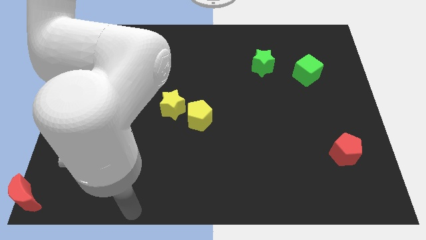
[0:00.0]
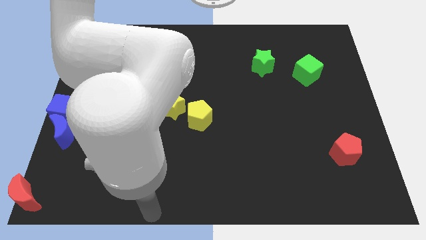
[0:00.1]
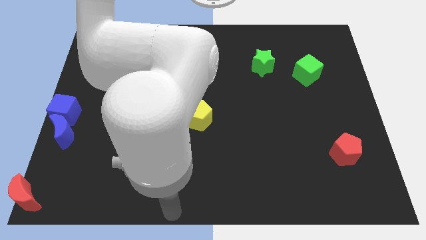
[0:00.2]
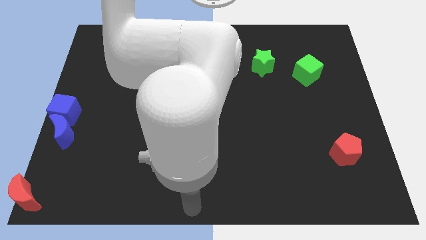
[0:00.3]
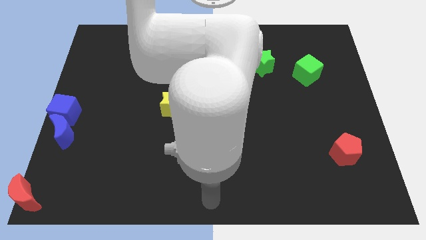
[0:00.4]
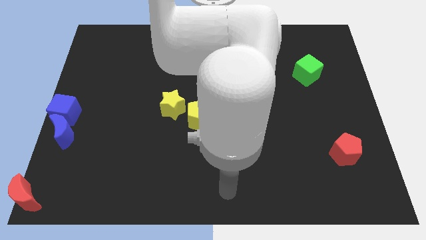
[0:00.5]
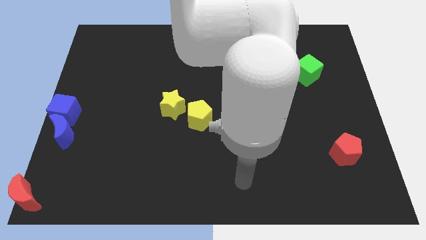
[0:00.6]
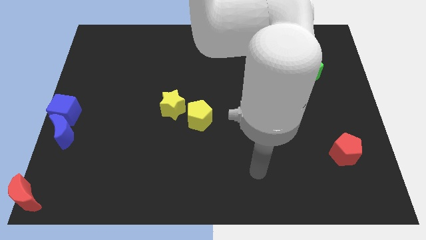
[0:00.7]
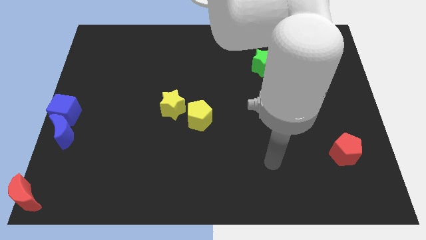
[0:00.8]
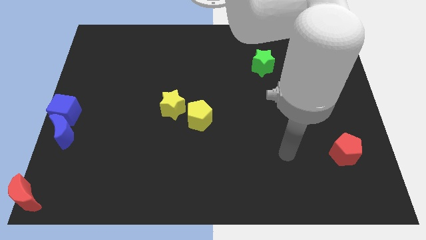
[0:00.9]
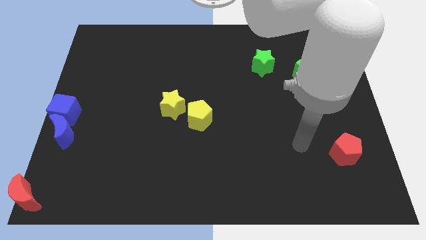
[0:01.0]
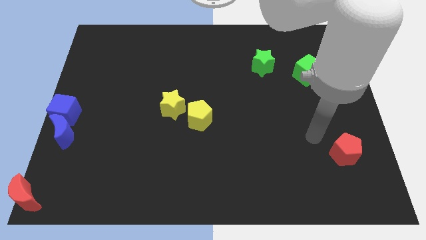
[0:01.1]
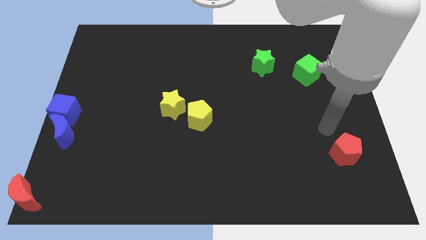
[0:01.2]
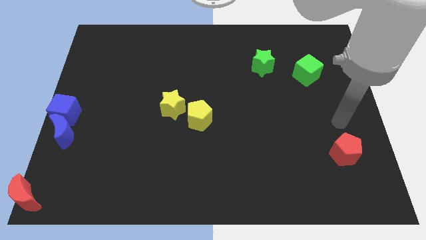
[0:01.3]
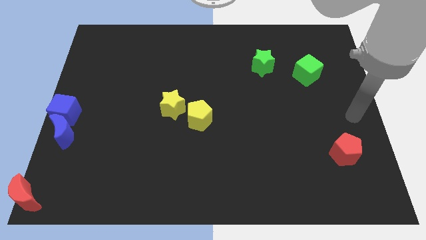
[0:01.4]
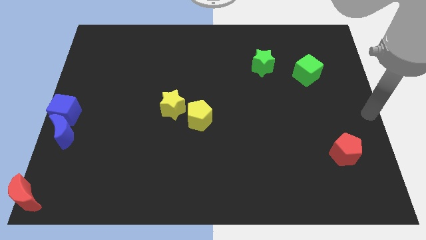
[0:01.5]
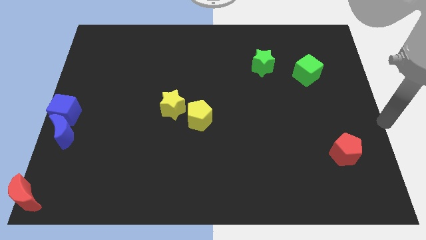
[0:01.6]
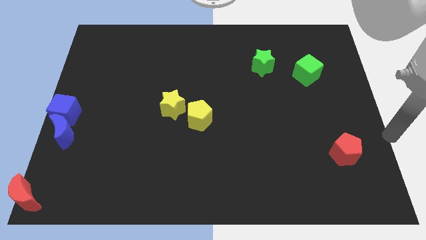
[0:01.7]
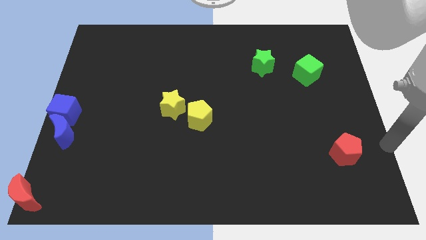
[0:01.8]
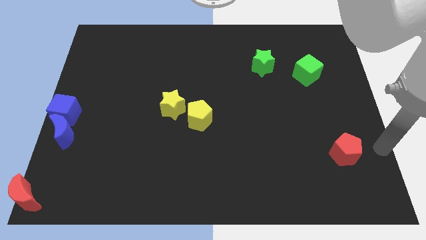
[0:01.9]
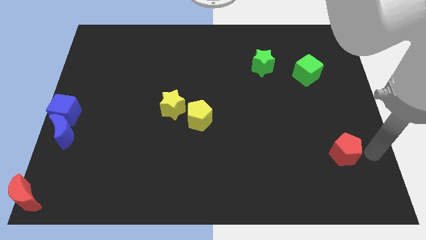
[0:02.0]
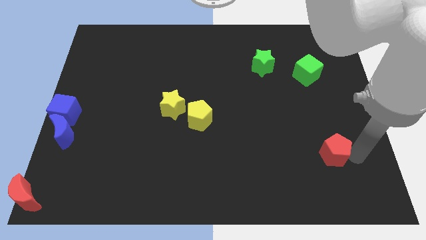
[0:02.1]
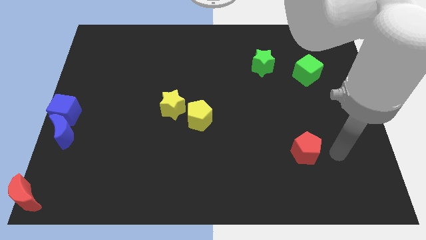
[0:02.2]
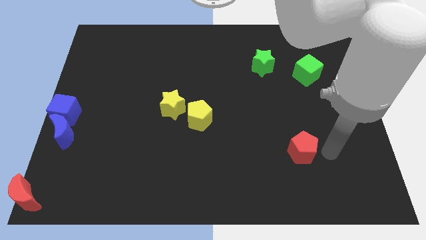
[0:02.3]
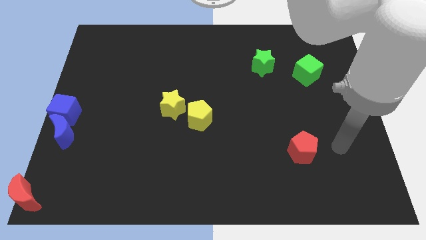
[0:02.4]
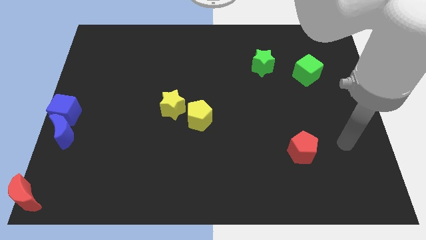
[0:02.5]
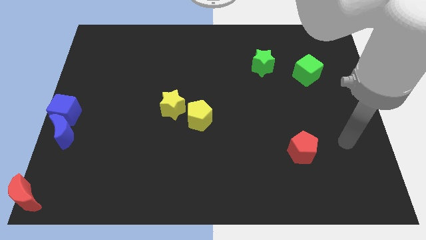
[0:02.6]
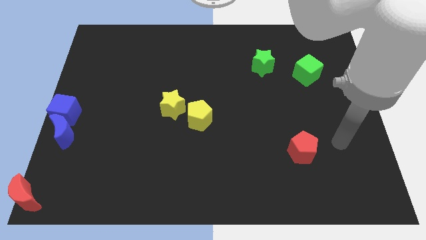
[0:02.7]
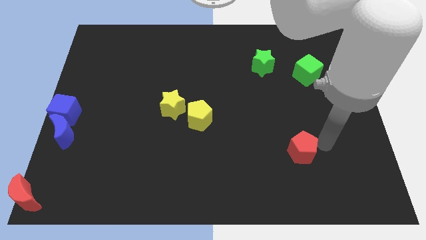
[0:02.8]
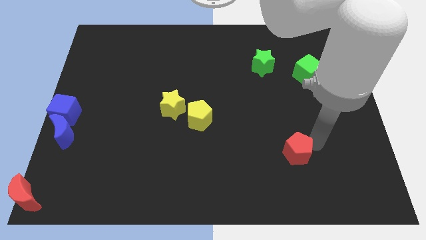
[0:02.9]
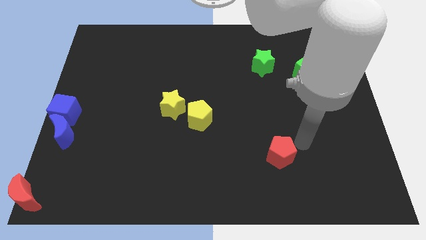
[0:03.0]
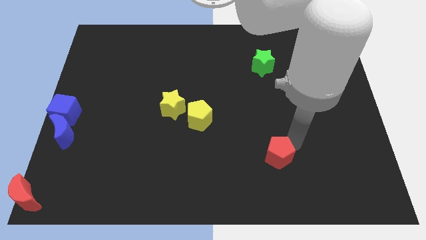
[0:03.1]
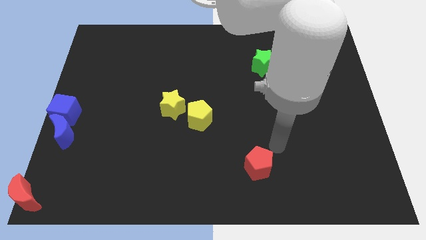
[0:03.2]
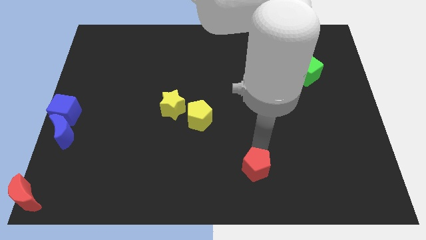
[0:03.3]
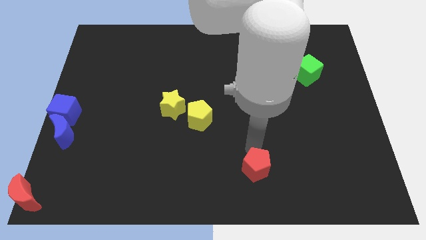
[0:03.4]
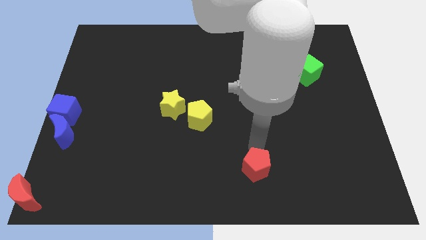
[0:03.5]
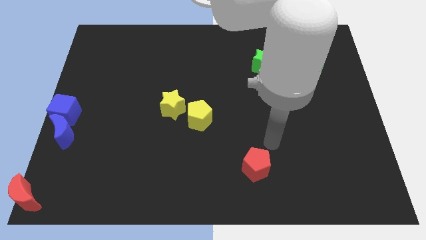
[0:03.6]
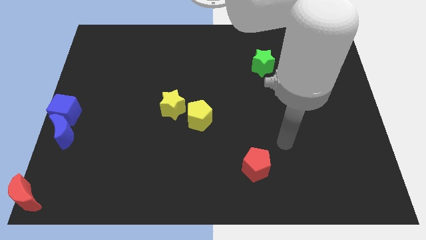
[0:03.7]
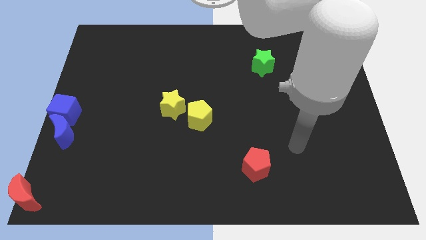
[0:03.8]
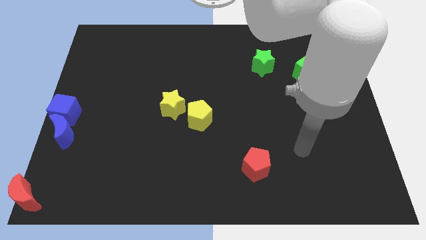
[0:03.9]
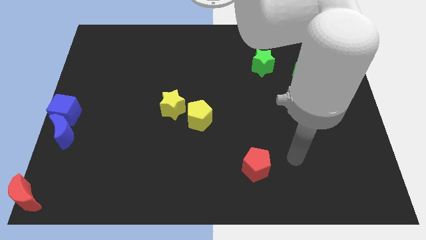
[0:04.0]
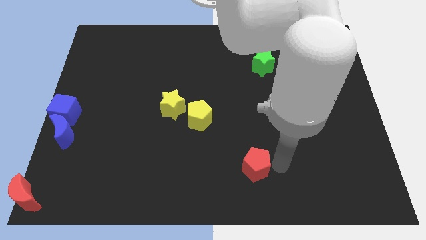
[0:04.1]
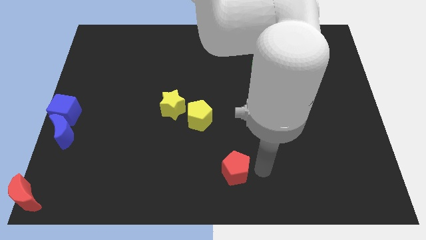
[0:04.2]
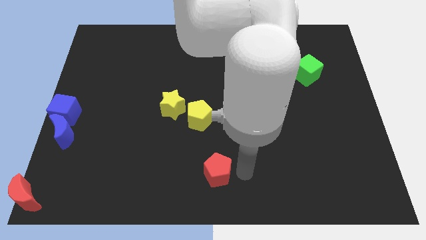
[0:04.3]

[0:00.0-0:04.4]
move the red pentagon towards the bottom center of the board

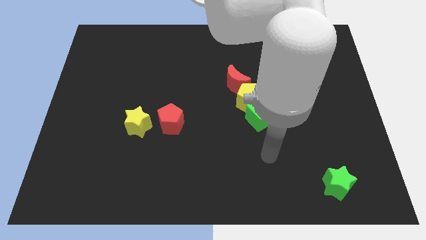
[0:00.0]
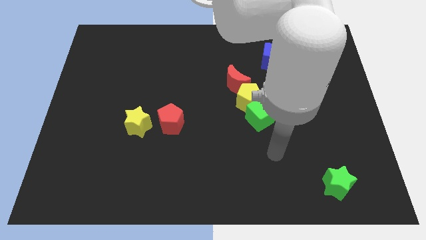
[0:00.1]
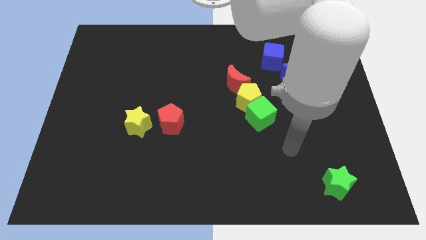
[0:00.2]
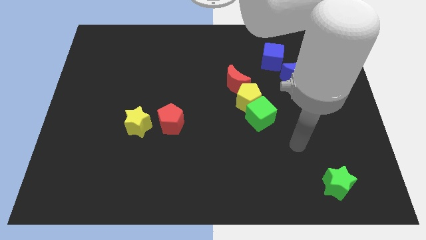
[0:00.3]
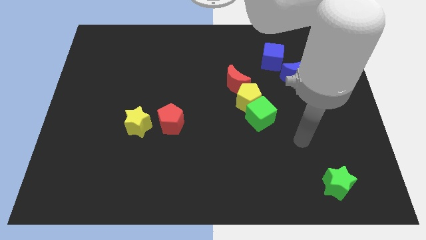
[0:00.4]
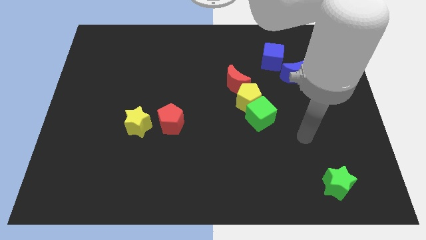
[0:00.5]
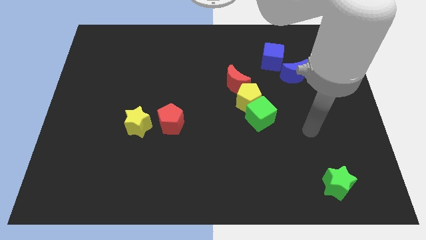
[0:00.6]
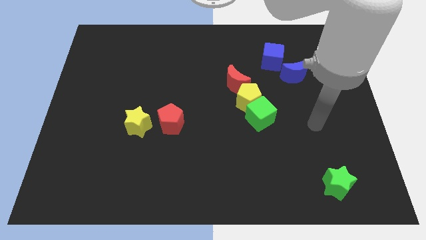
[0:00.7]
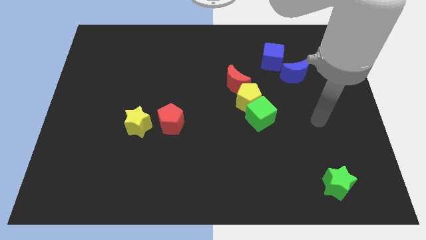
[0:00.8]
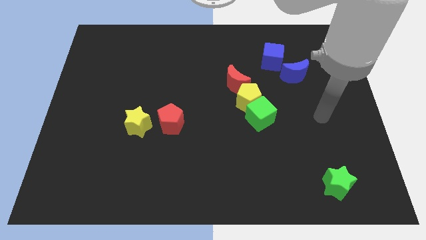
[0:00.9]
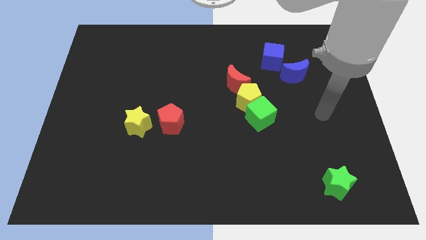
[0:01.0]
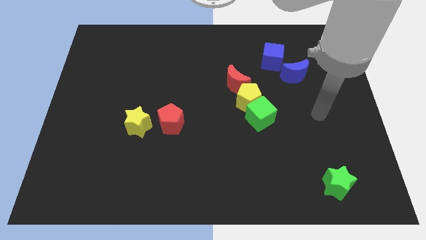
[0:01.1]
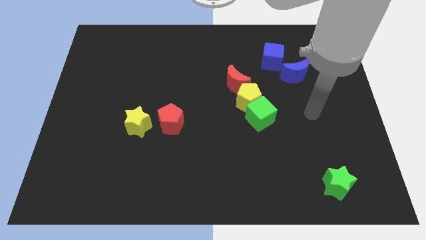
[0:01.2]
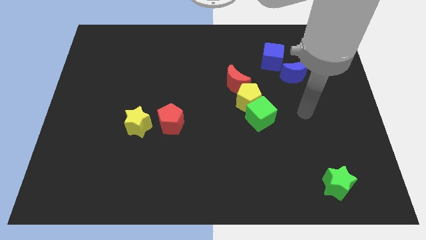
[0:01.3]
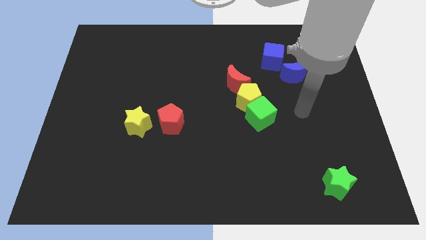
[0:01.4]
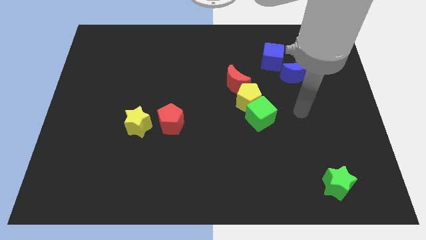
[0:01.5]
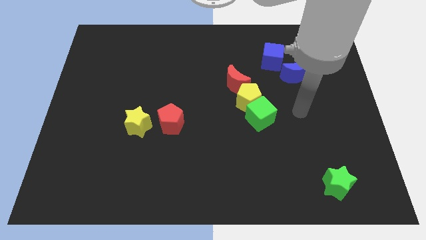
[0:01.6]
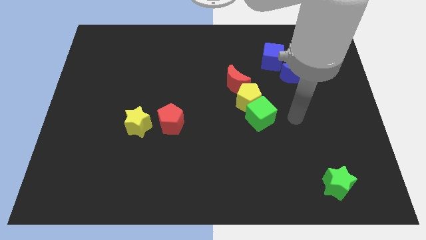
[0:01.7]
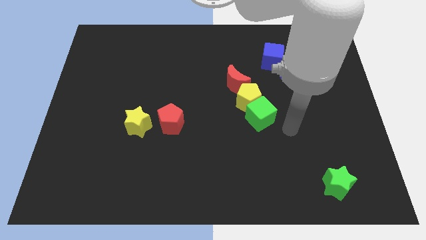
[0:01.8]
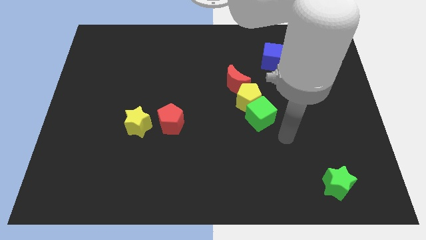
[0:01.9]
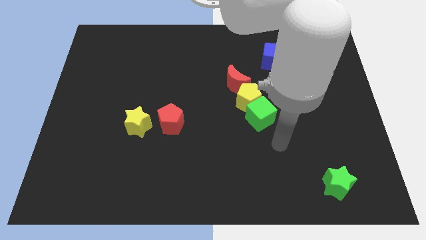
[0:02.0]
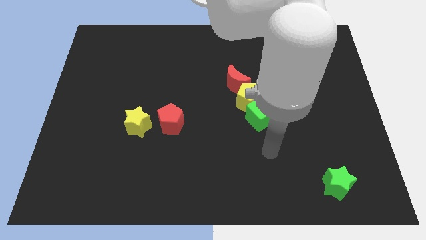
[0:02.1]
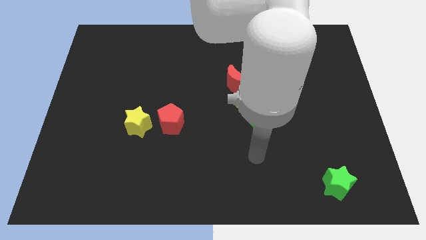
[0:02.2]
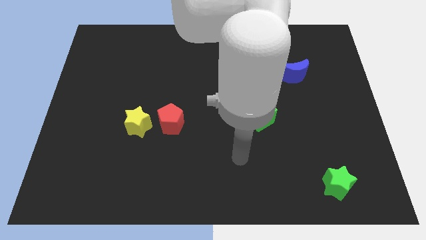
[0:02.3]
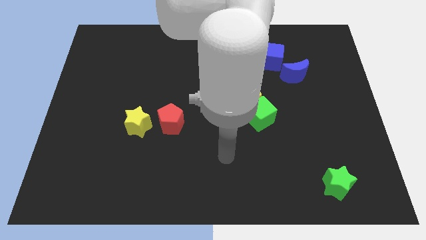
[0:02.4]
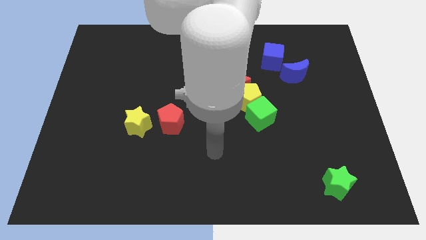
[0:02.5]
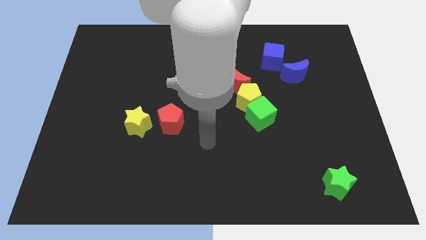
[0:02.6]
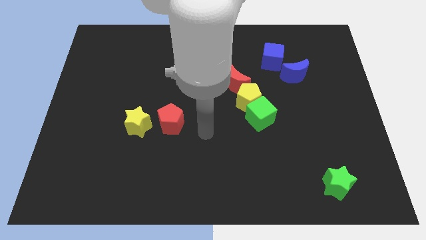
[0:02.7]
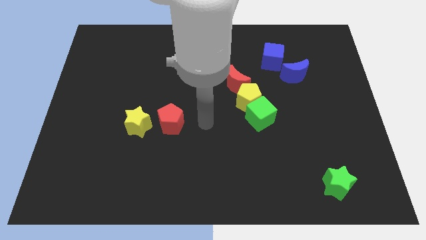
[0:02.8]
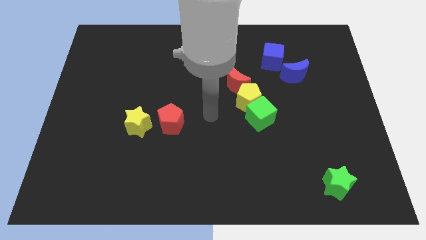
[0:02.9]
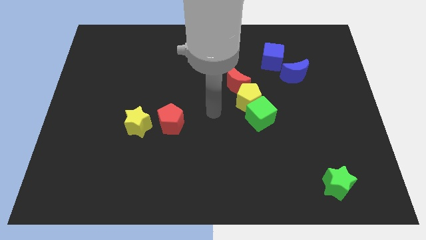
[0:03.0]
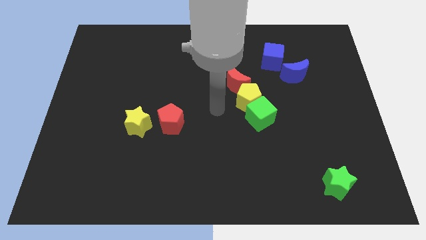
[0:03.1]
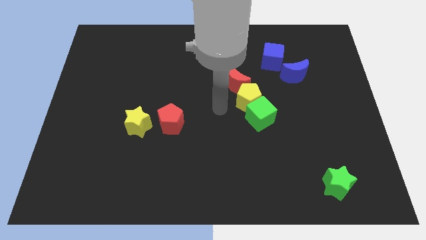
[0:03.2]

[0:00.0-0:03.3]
place your hand parallel left to the yellow pentagon

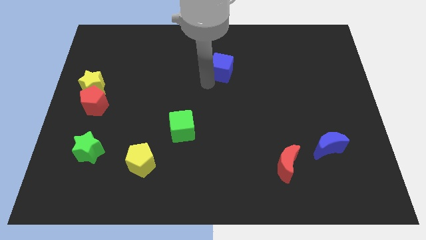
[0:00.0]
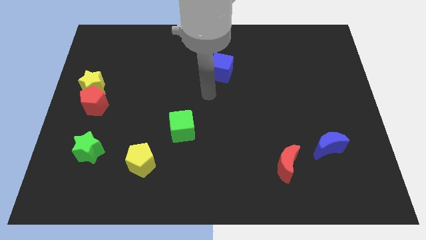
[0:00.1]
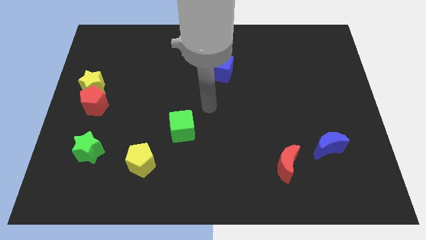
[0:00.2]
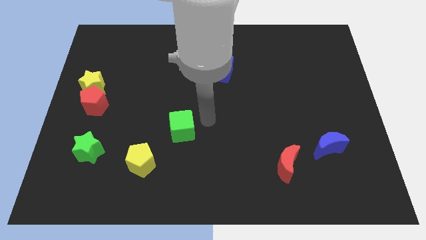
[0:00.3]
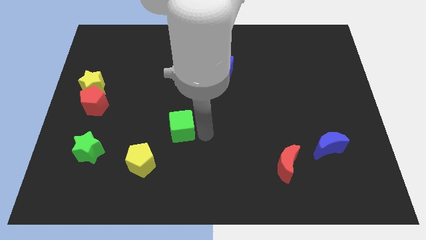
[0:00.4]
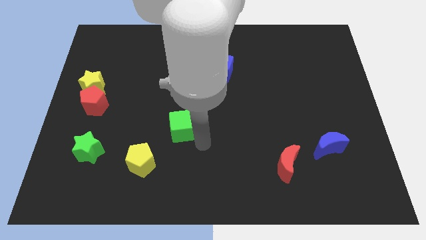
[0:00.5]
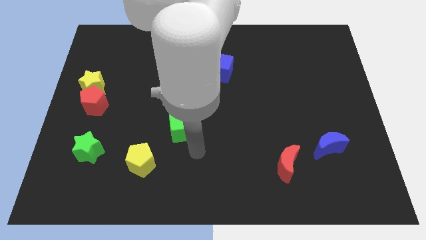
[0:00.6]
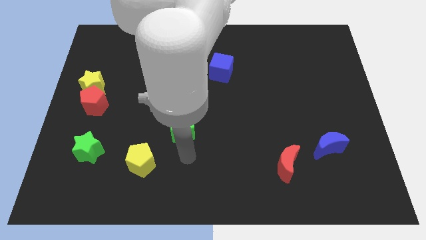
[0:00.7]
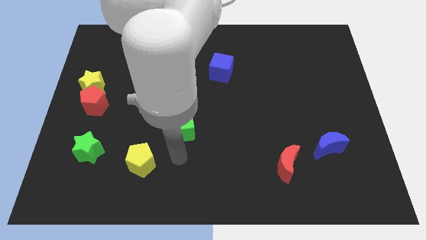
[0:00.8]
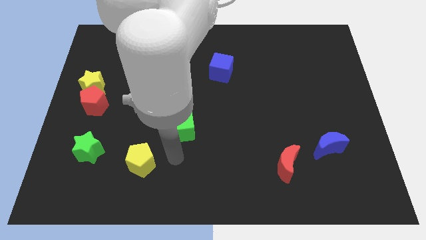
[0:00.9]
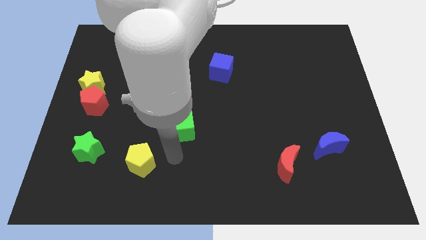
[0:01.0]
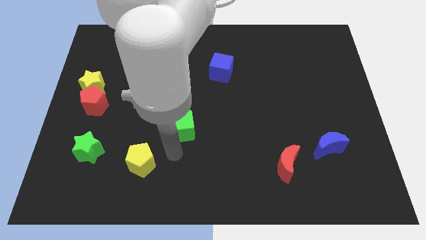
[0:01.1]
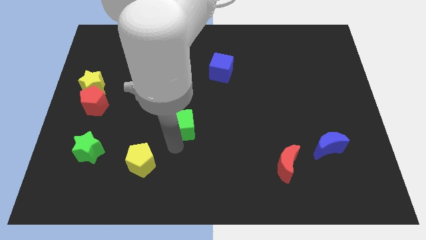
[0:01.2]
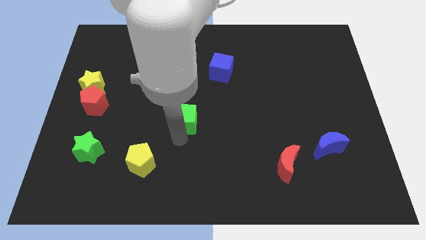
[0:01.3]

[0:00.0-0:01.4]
place your arm below green cube
